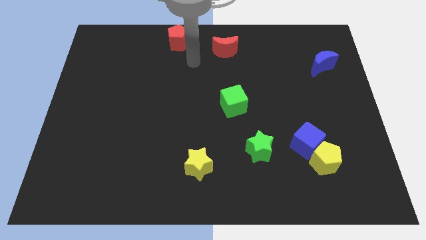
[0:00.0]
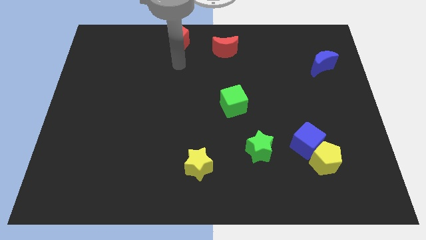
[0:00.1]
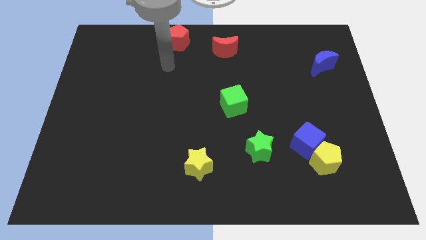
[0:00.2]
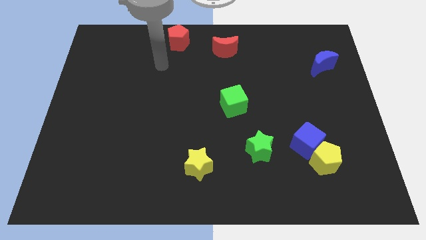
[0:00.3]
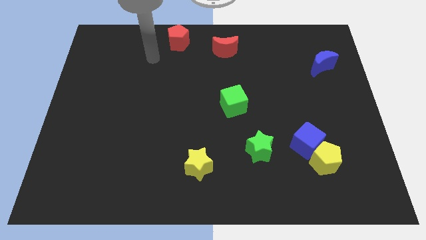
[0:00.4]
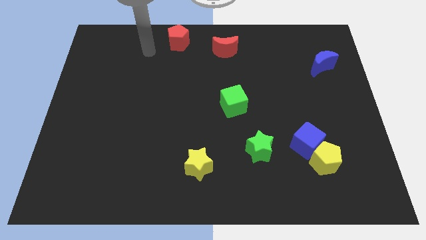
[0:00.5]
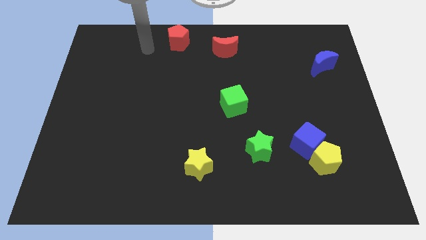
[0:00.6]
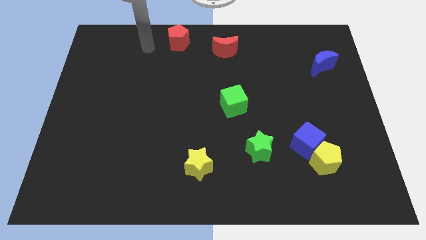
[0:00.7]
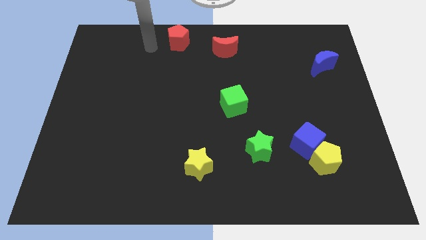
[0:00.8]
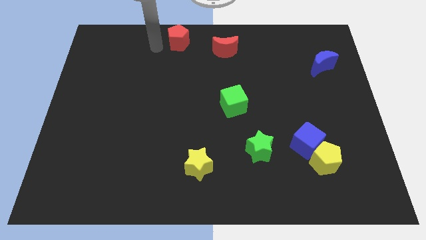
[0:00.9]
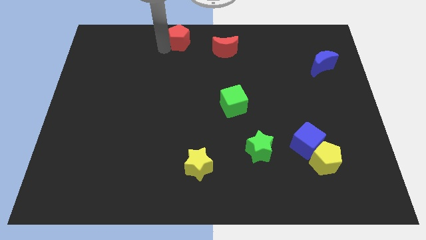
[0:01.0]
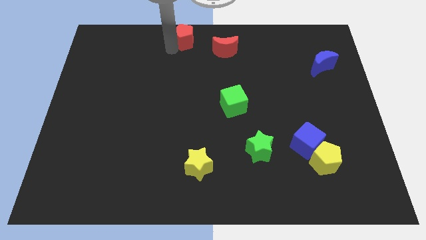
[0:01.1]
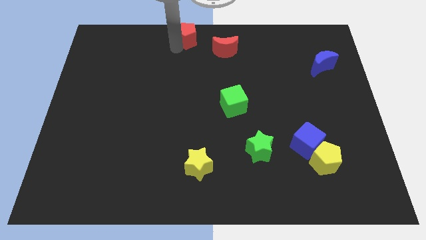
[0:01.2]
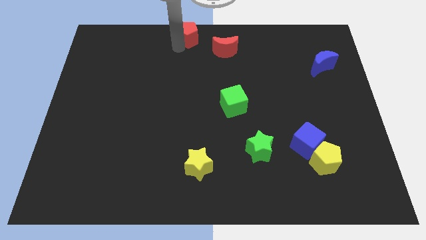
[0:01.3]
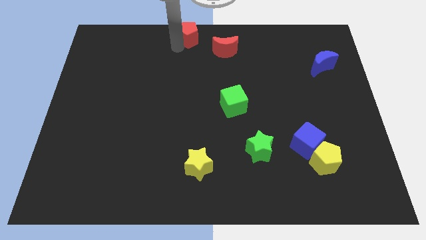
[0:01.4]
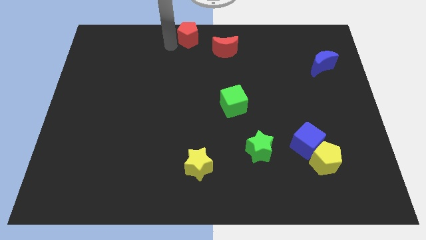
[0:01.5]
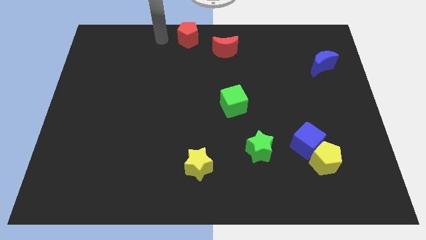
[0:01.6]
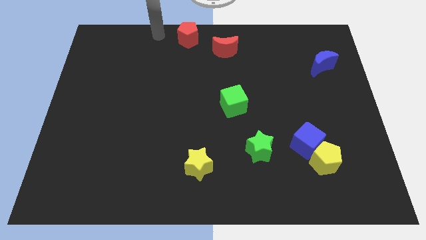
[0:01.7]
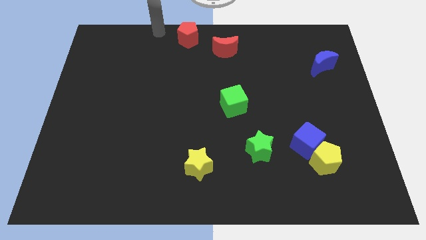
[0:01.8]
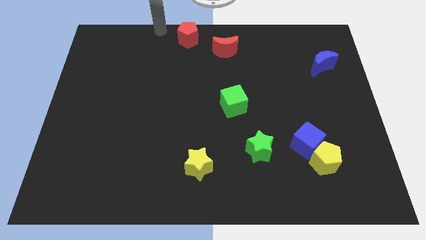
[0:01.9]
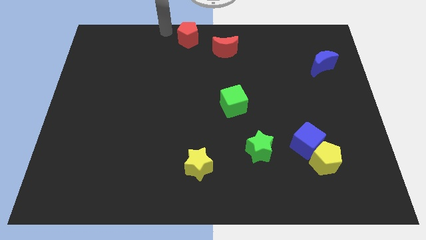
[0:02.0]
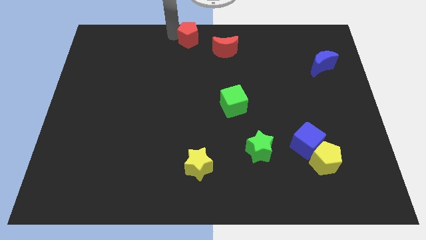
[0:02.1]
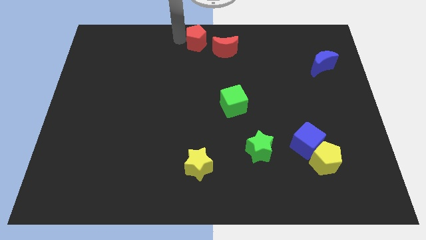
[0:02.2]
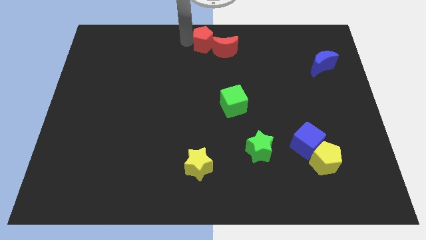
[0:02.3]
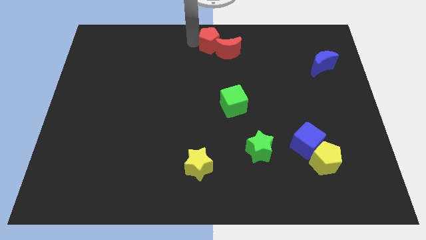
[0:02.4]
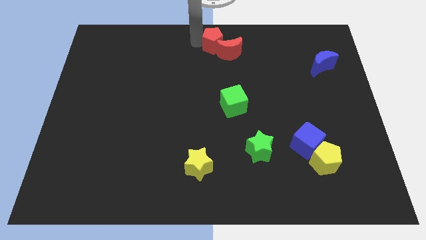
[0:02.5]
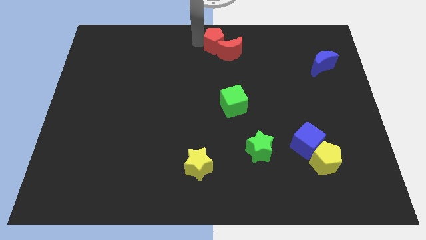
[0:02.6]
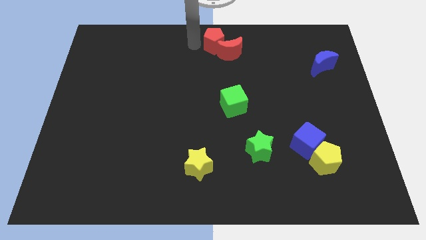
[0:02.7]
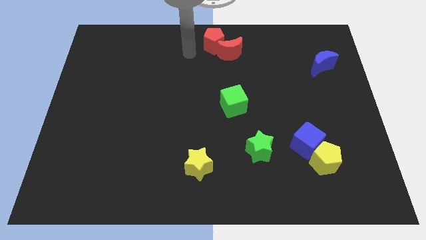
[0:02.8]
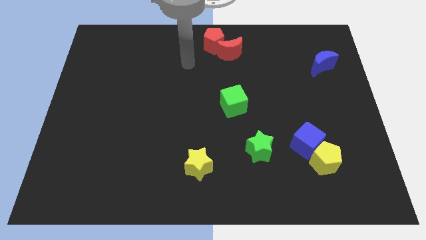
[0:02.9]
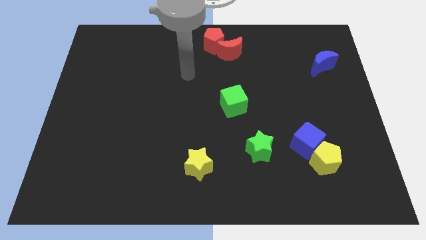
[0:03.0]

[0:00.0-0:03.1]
push red pentagon into the red crescent

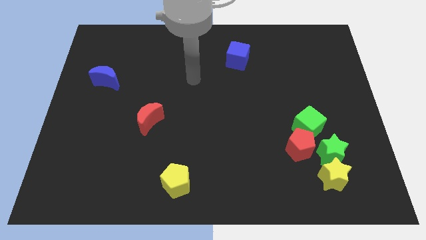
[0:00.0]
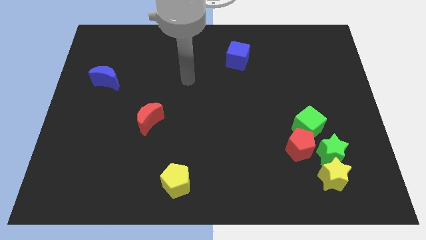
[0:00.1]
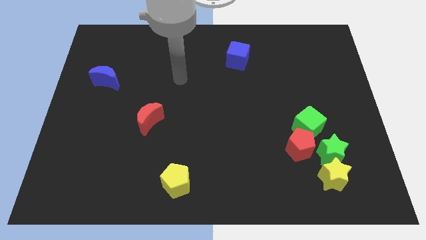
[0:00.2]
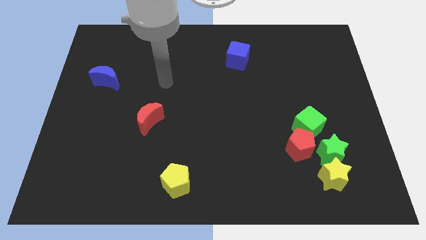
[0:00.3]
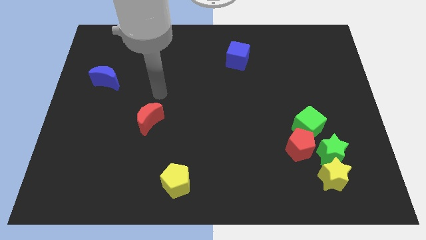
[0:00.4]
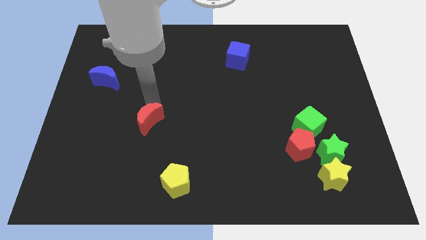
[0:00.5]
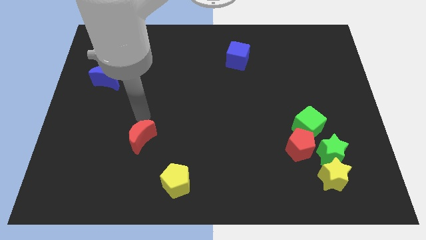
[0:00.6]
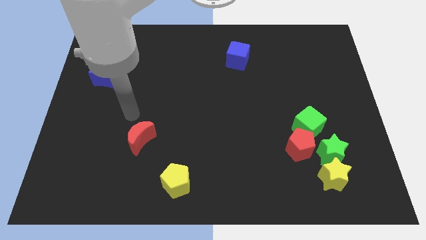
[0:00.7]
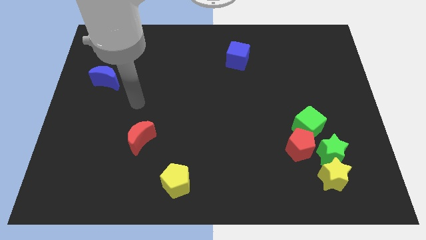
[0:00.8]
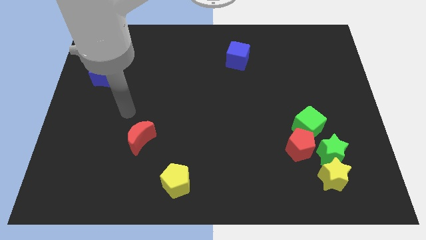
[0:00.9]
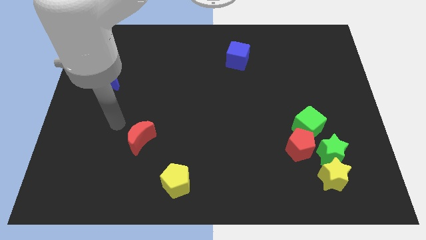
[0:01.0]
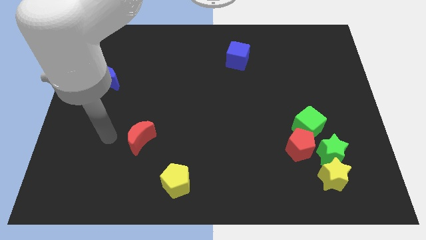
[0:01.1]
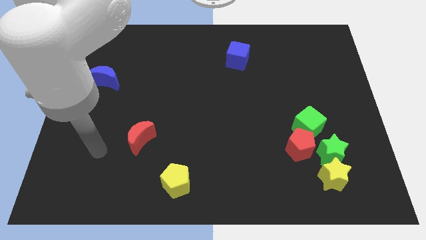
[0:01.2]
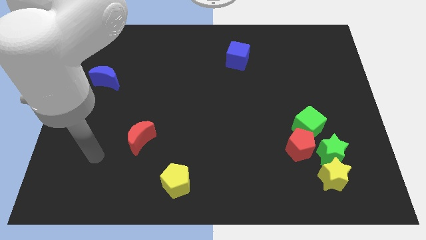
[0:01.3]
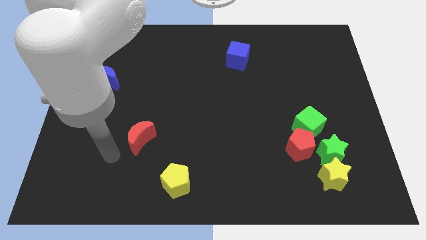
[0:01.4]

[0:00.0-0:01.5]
push red crescent downwards

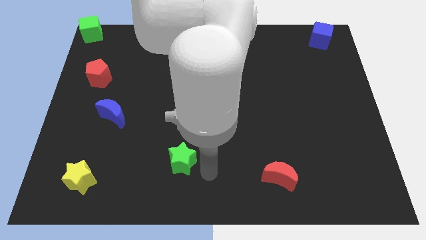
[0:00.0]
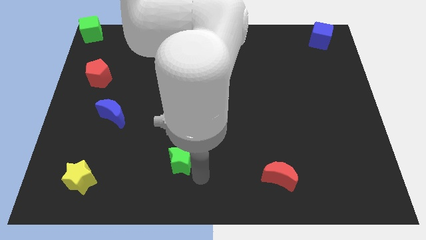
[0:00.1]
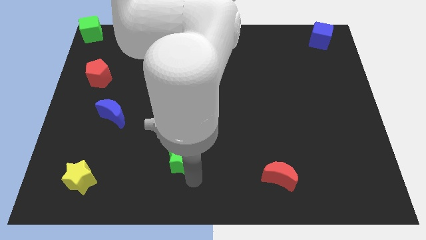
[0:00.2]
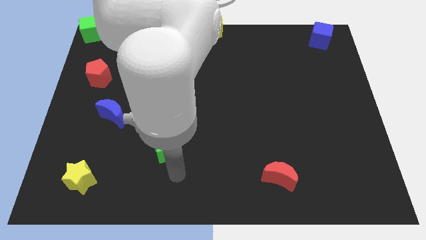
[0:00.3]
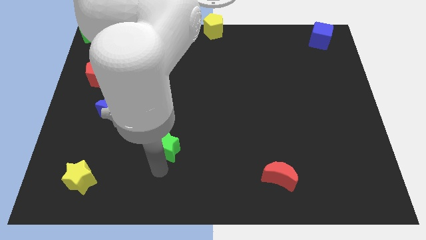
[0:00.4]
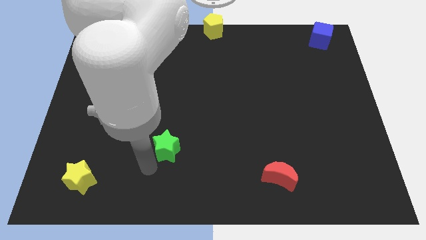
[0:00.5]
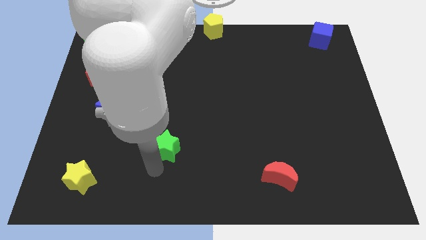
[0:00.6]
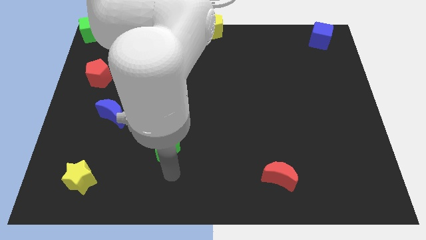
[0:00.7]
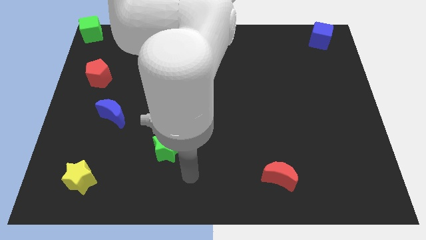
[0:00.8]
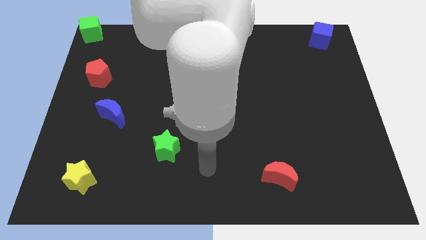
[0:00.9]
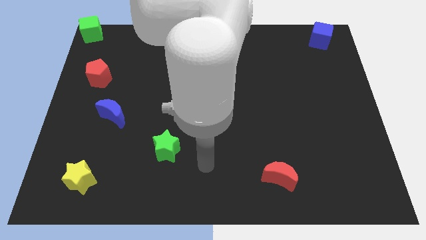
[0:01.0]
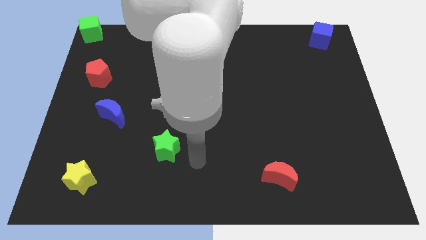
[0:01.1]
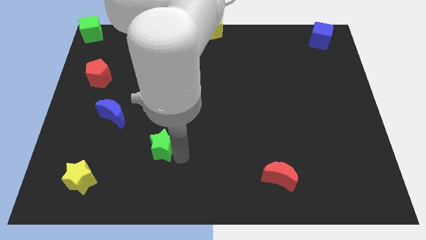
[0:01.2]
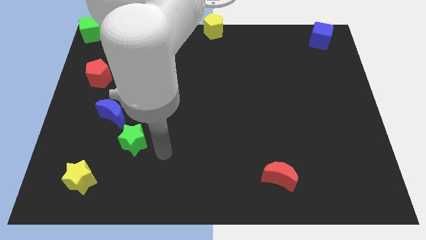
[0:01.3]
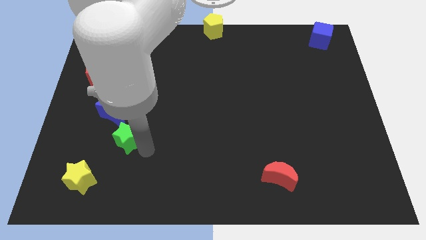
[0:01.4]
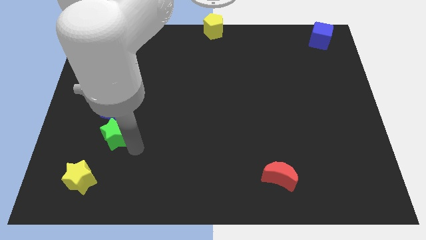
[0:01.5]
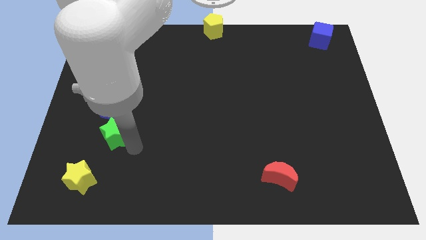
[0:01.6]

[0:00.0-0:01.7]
move the green star below the blue crescent

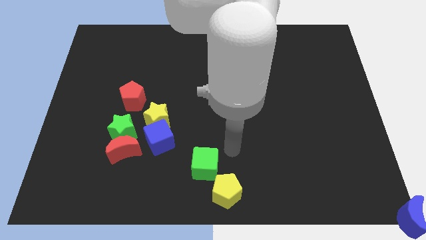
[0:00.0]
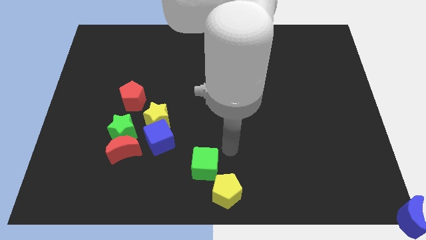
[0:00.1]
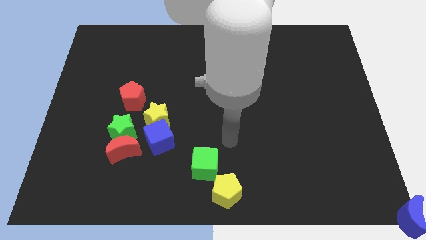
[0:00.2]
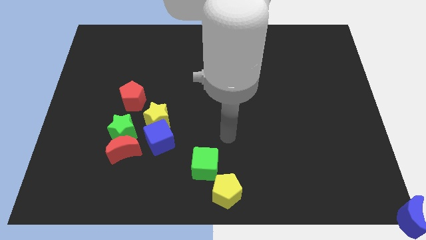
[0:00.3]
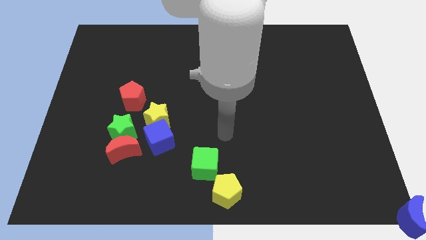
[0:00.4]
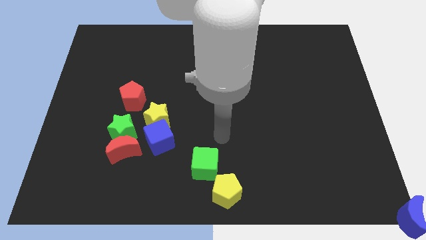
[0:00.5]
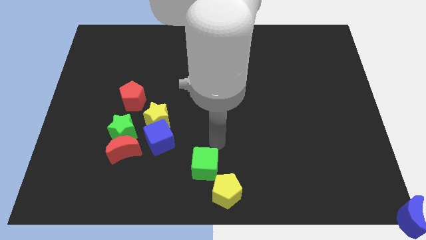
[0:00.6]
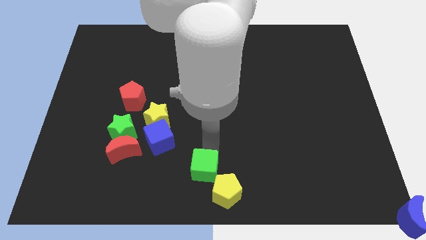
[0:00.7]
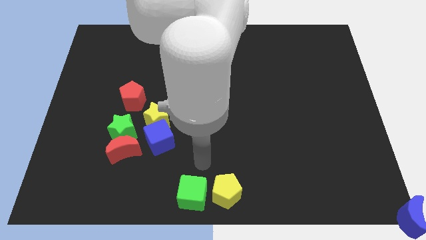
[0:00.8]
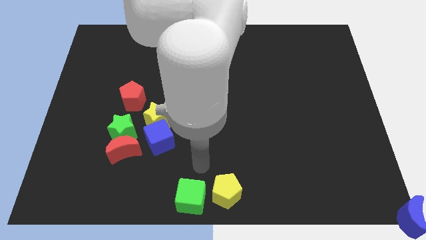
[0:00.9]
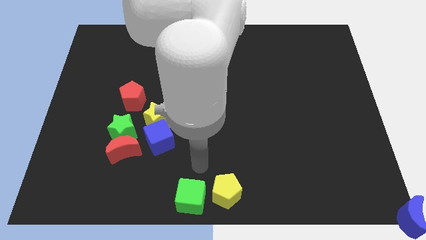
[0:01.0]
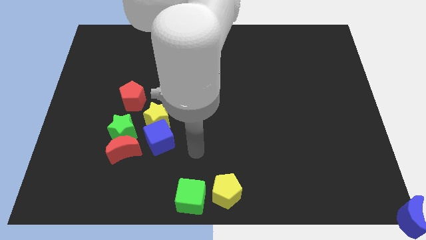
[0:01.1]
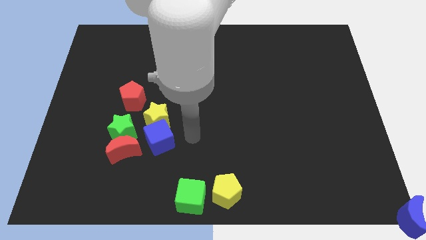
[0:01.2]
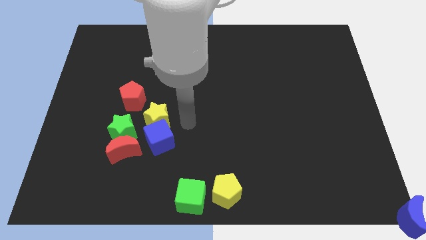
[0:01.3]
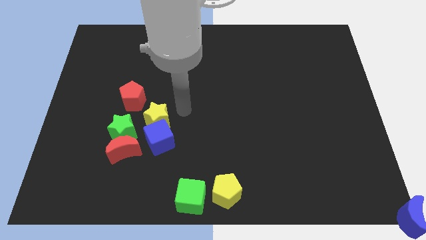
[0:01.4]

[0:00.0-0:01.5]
push the green cube to the bottom center of the board

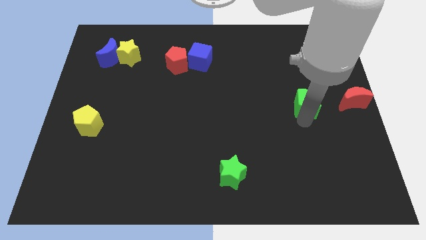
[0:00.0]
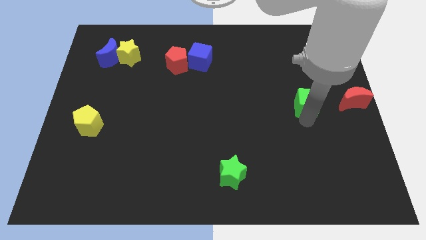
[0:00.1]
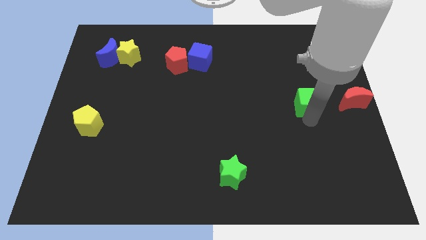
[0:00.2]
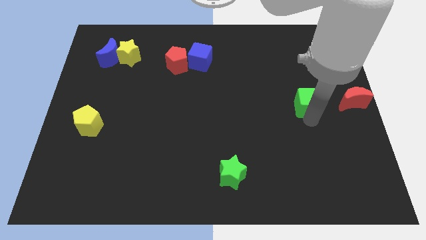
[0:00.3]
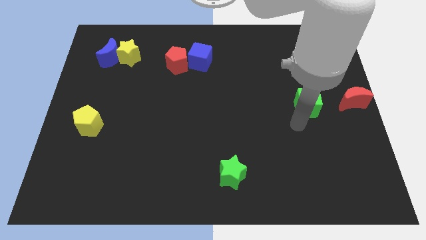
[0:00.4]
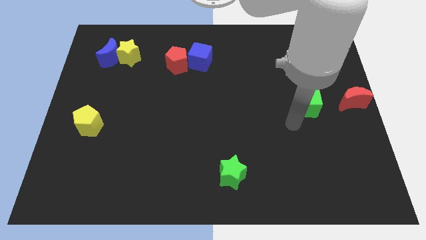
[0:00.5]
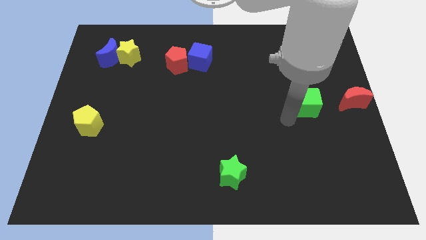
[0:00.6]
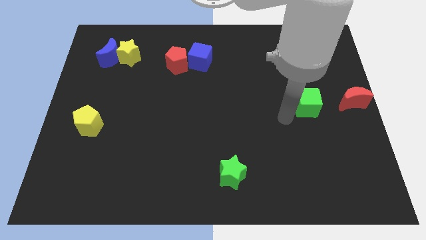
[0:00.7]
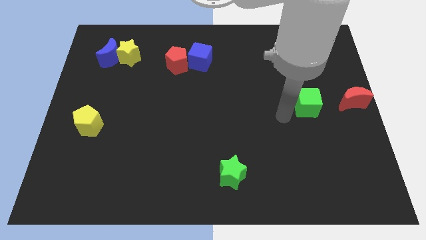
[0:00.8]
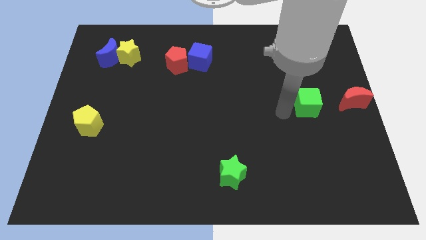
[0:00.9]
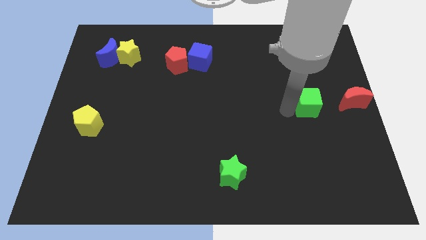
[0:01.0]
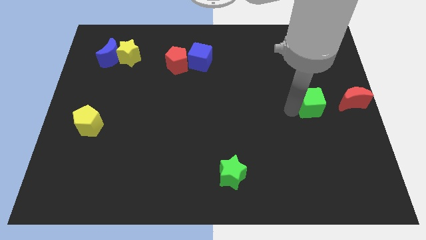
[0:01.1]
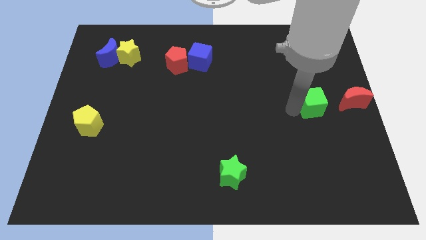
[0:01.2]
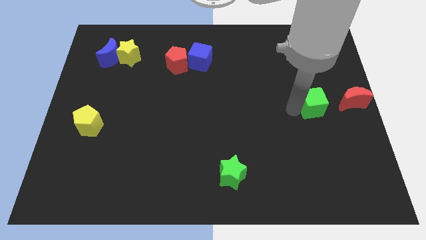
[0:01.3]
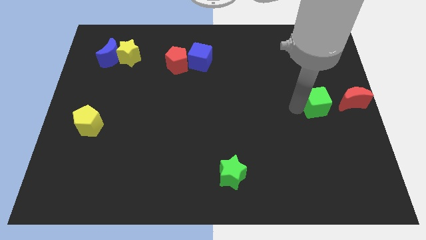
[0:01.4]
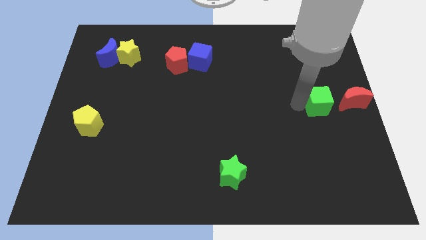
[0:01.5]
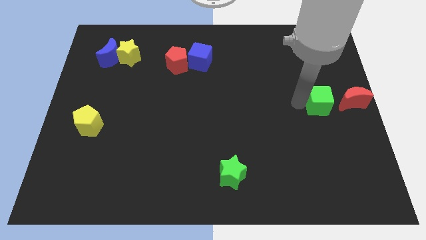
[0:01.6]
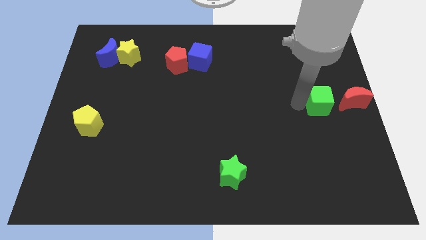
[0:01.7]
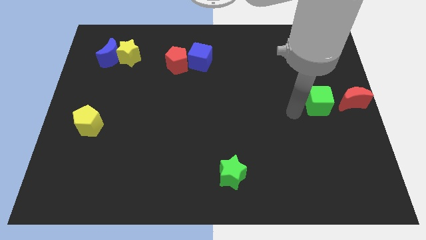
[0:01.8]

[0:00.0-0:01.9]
move the green cube closer to the red crescent
